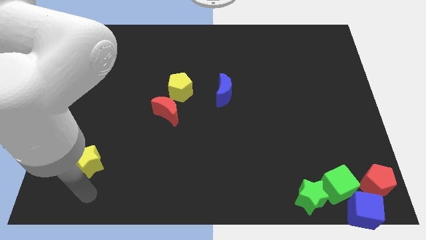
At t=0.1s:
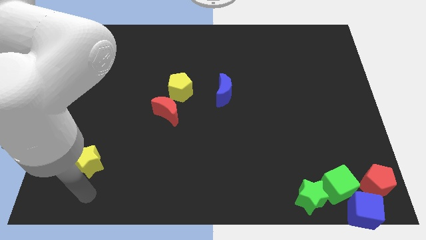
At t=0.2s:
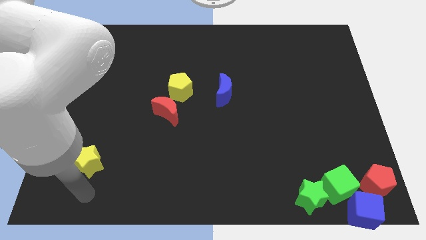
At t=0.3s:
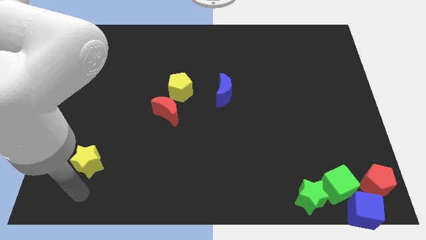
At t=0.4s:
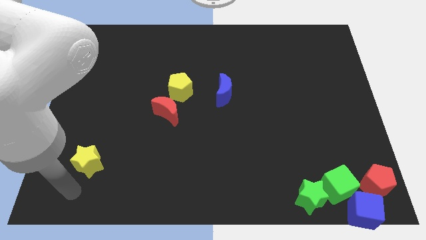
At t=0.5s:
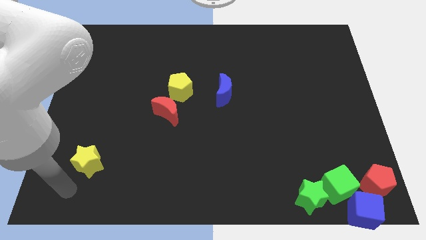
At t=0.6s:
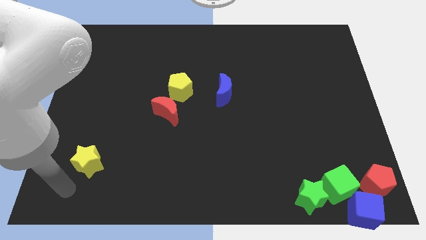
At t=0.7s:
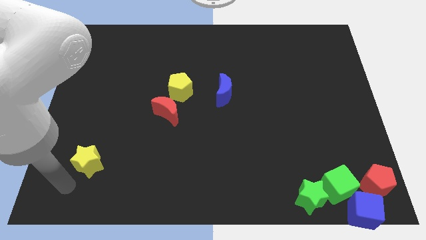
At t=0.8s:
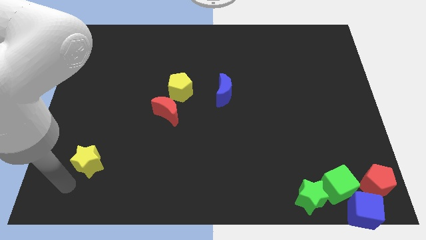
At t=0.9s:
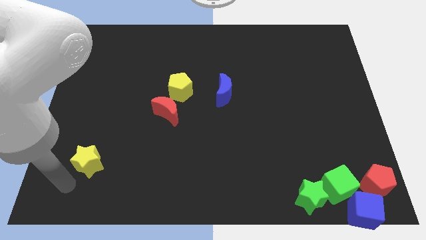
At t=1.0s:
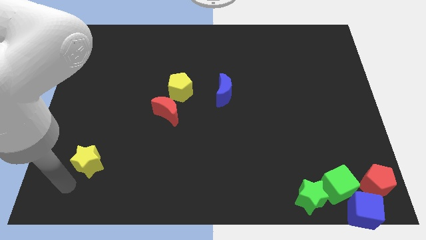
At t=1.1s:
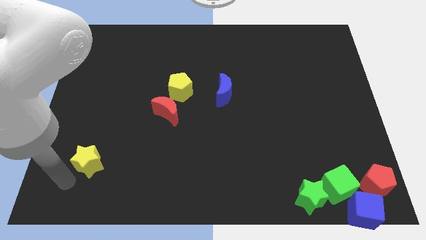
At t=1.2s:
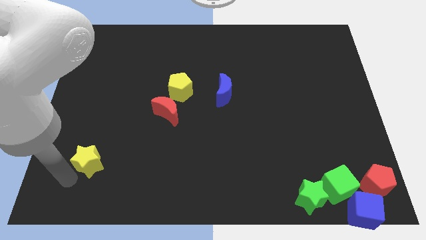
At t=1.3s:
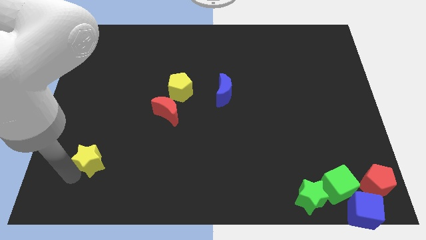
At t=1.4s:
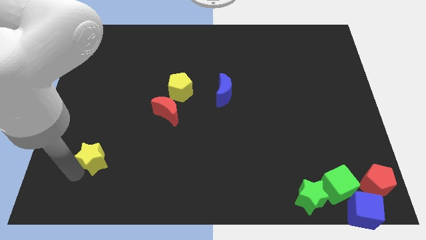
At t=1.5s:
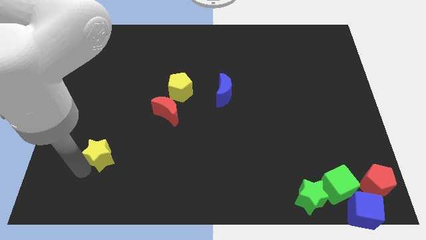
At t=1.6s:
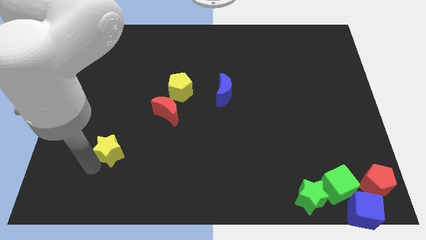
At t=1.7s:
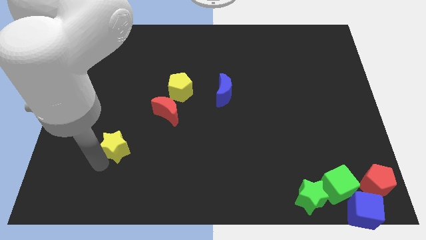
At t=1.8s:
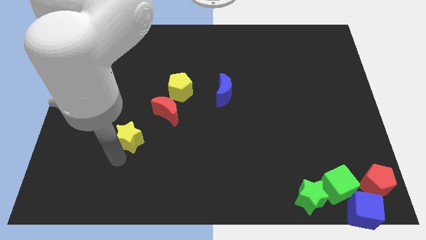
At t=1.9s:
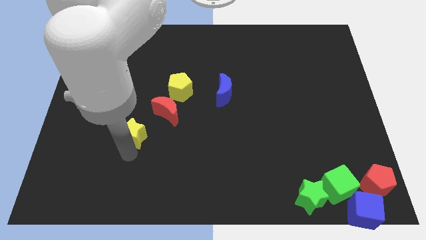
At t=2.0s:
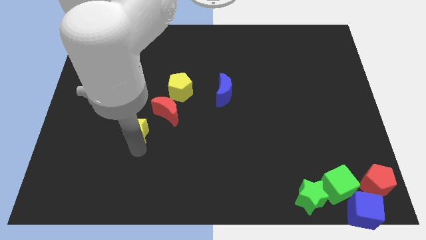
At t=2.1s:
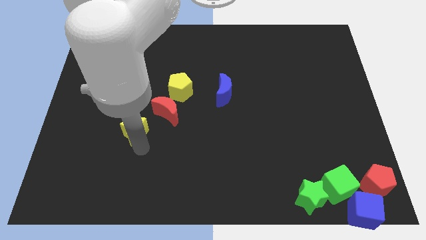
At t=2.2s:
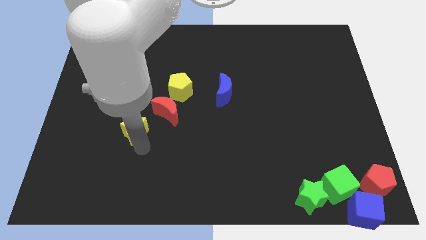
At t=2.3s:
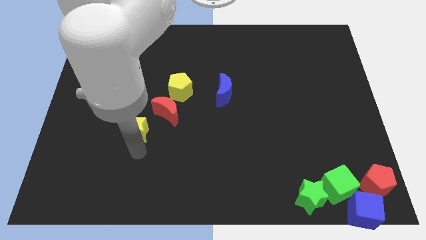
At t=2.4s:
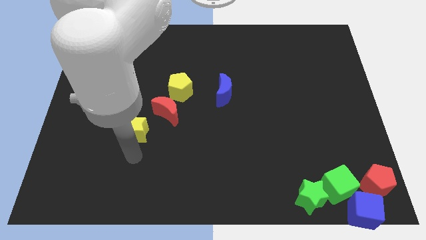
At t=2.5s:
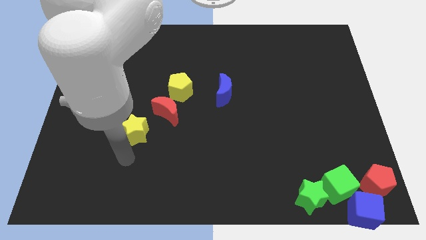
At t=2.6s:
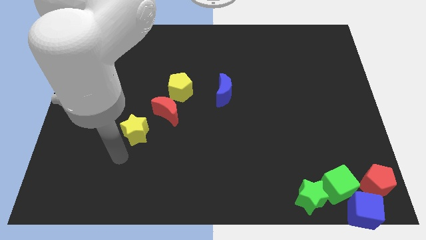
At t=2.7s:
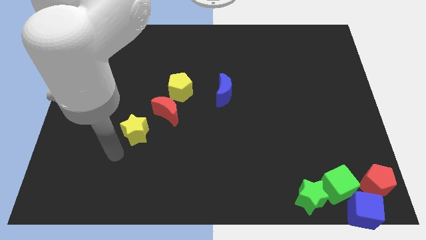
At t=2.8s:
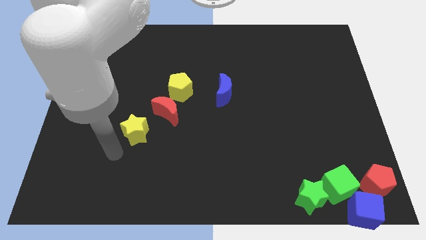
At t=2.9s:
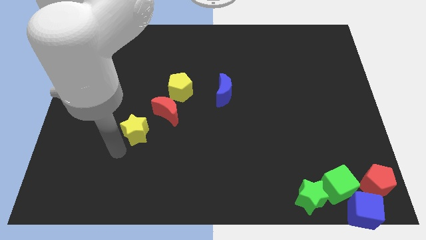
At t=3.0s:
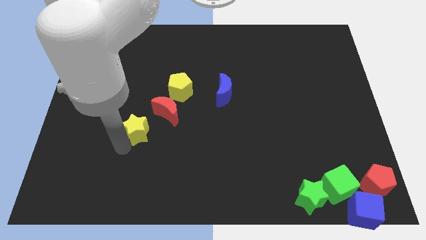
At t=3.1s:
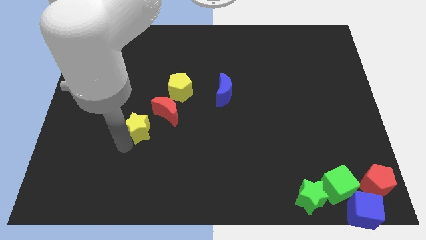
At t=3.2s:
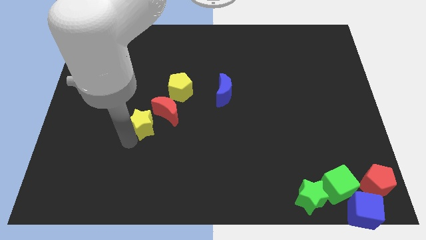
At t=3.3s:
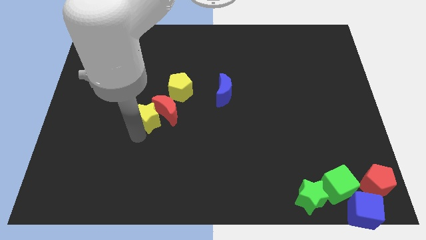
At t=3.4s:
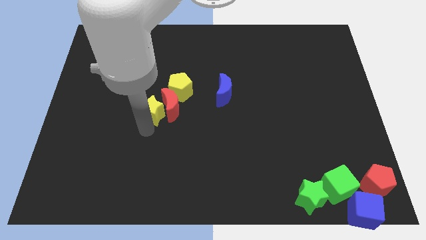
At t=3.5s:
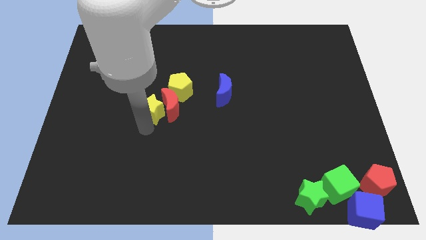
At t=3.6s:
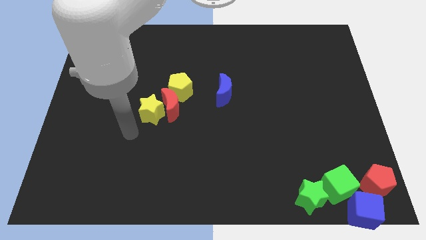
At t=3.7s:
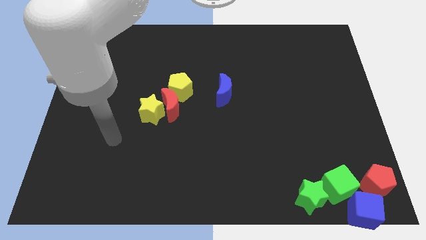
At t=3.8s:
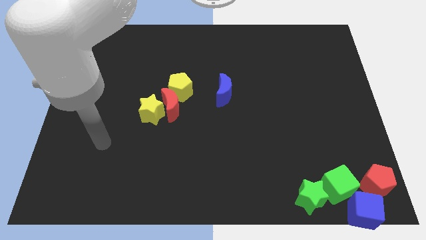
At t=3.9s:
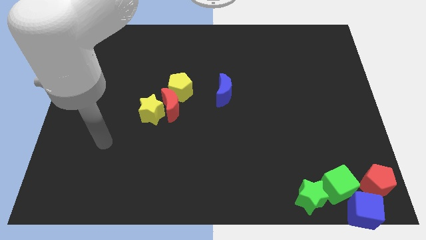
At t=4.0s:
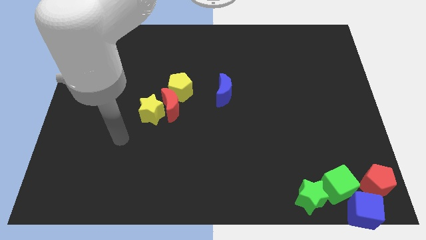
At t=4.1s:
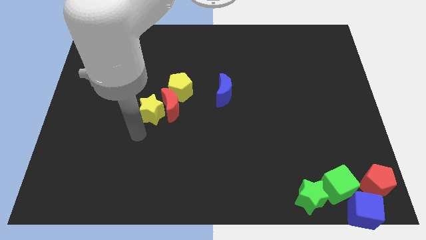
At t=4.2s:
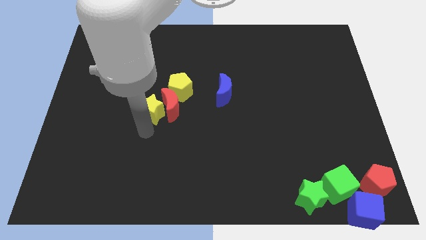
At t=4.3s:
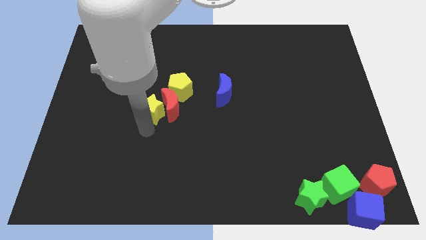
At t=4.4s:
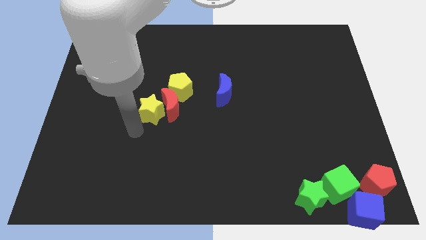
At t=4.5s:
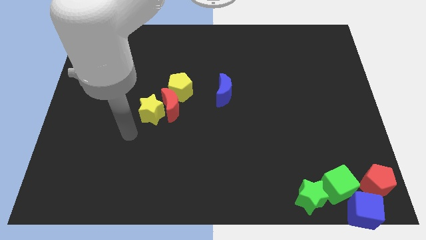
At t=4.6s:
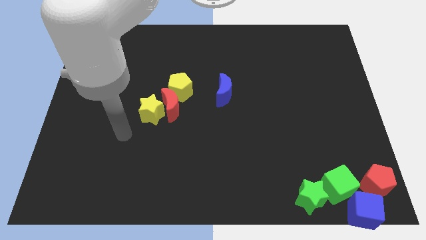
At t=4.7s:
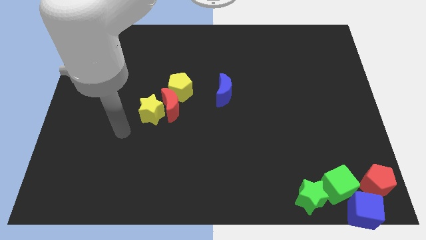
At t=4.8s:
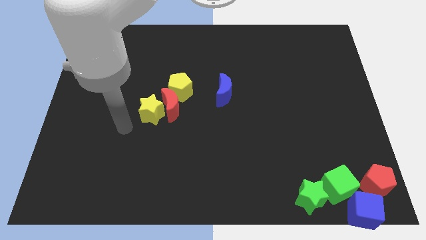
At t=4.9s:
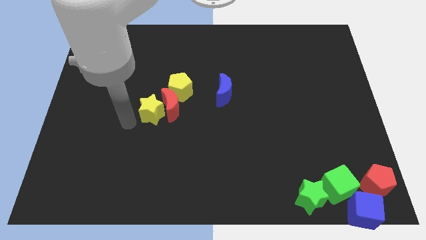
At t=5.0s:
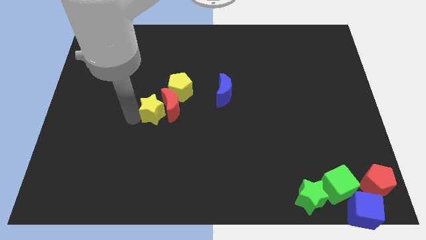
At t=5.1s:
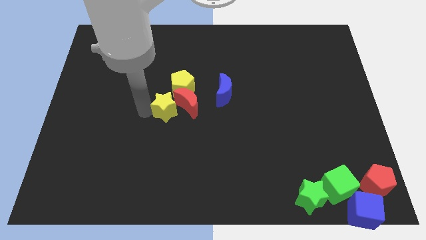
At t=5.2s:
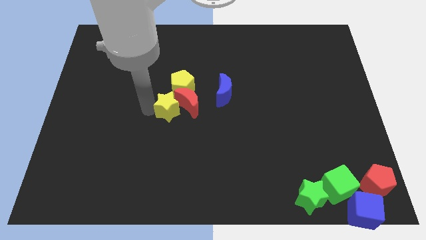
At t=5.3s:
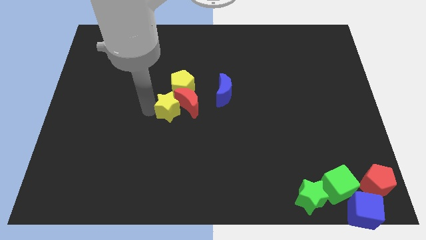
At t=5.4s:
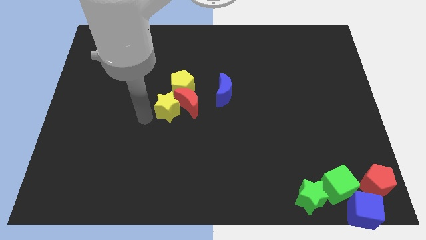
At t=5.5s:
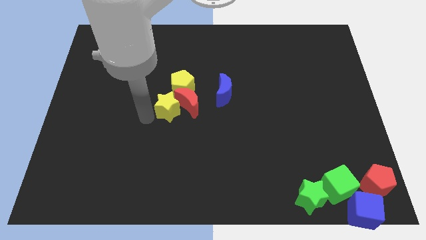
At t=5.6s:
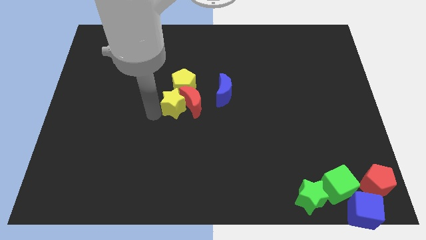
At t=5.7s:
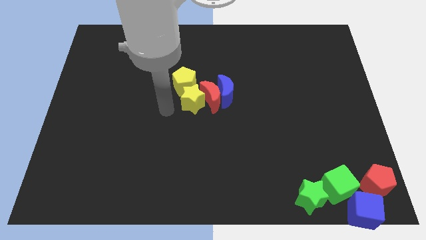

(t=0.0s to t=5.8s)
group up the yellow blocks red moon and blue moon at the center of the table

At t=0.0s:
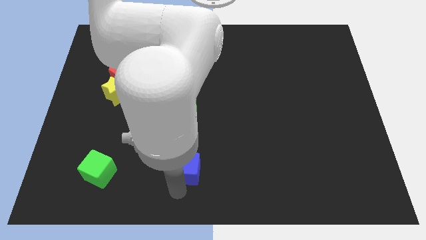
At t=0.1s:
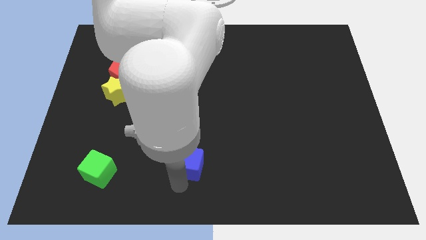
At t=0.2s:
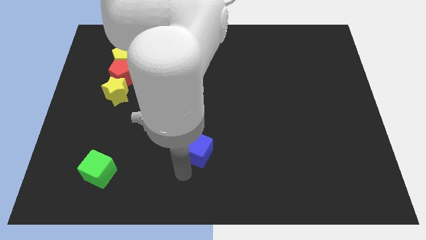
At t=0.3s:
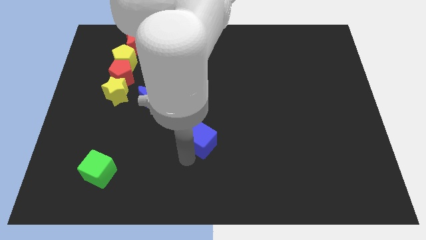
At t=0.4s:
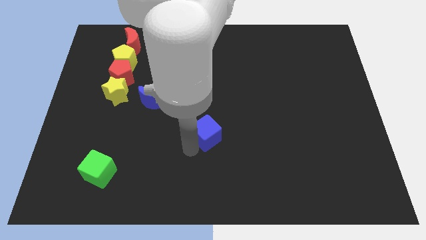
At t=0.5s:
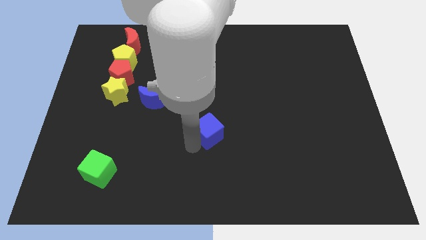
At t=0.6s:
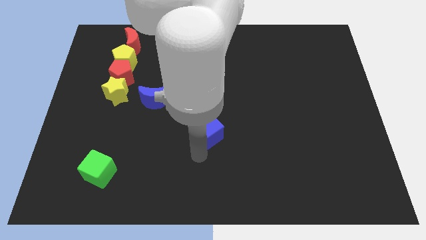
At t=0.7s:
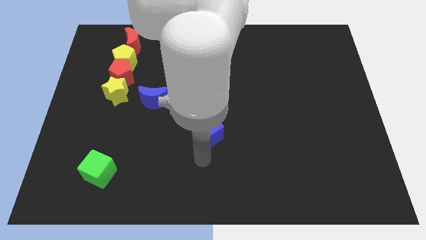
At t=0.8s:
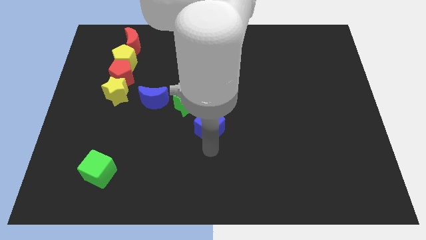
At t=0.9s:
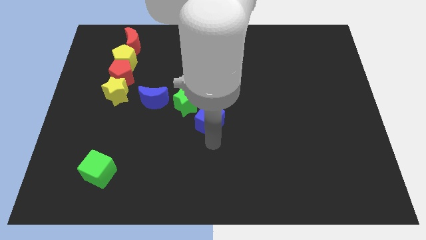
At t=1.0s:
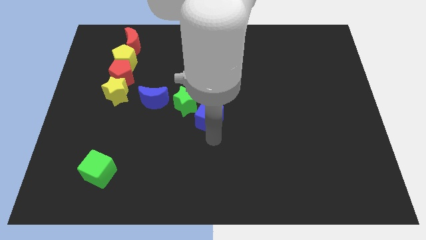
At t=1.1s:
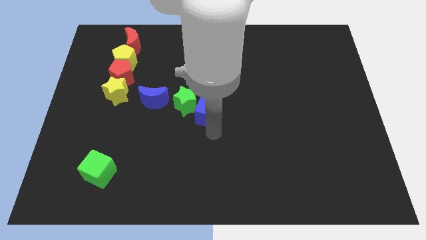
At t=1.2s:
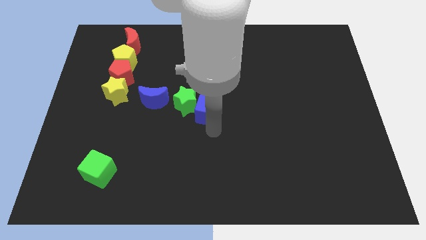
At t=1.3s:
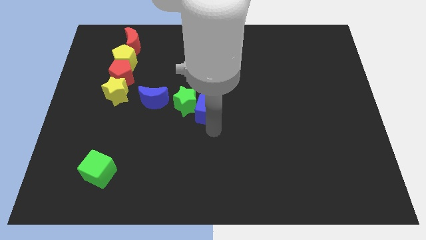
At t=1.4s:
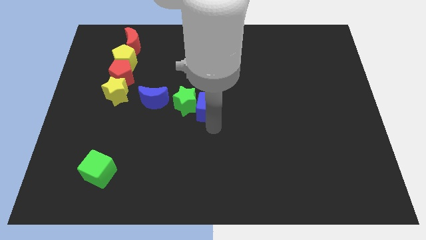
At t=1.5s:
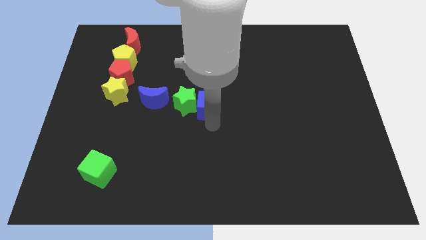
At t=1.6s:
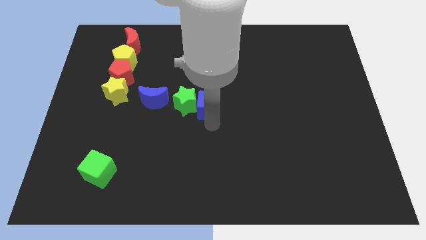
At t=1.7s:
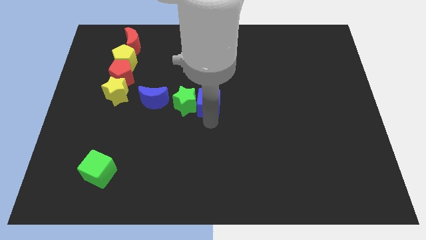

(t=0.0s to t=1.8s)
place the blue cube towards the center of the board

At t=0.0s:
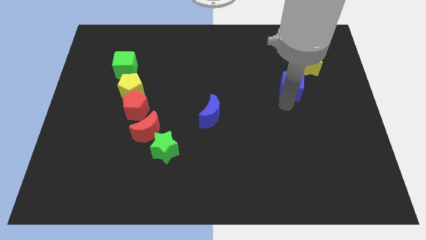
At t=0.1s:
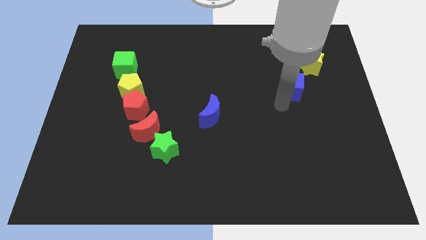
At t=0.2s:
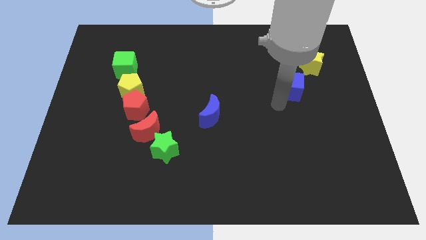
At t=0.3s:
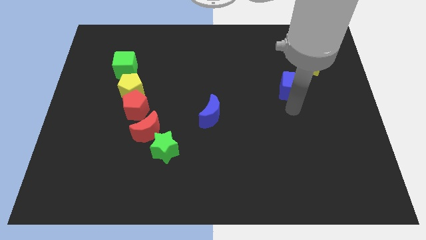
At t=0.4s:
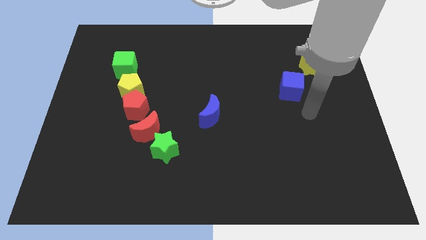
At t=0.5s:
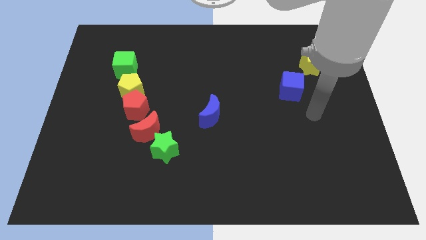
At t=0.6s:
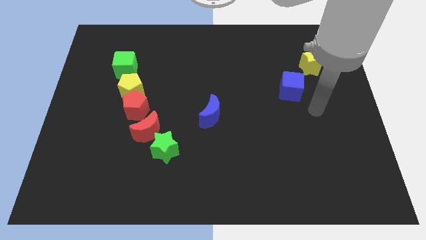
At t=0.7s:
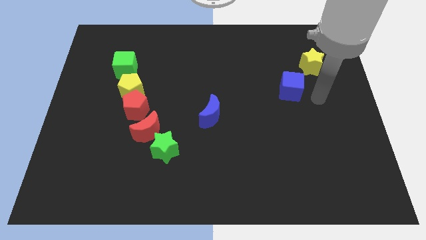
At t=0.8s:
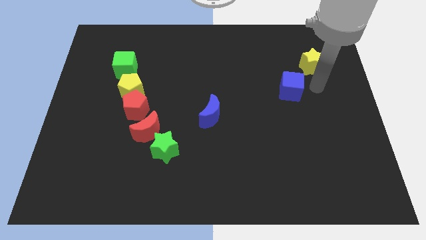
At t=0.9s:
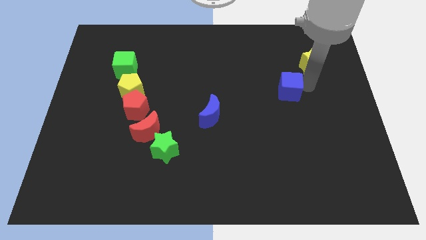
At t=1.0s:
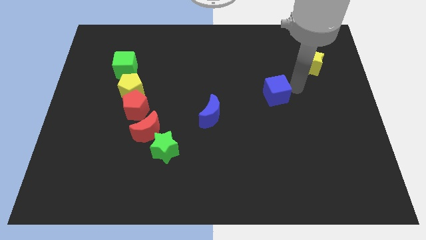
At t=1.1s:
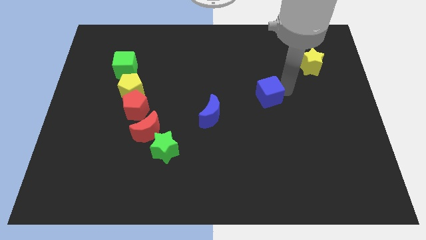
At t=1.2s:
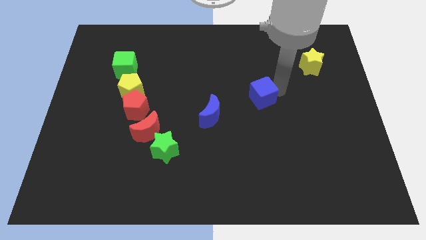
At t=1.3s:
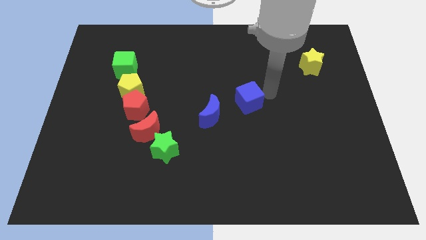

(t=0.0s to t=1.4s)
push blue cube beside blue crescent
